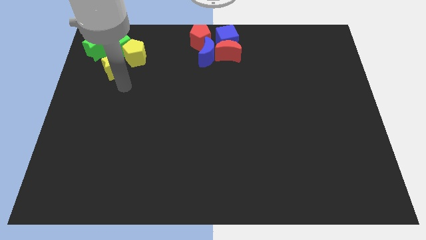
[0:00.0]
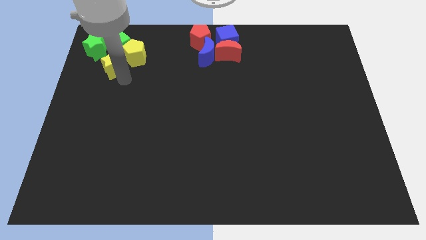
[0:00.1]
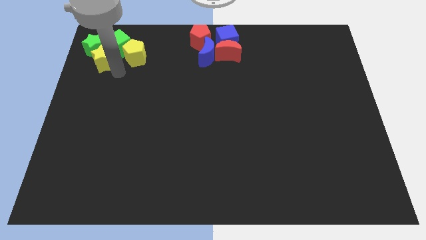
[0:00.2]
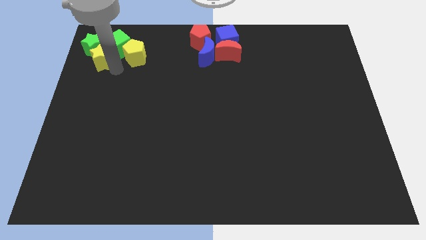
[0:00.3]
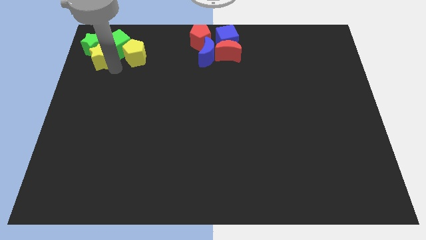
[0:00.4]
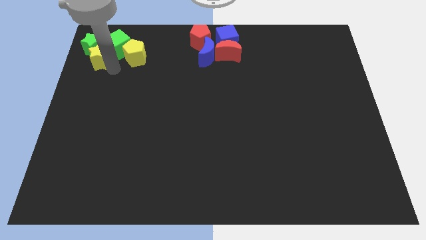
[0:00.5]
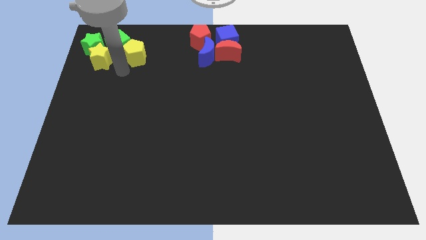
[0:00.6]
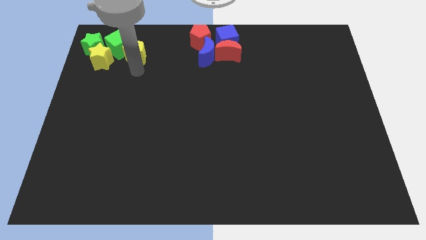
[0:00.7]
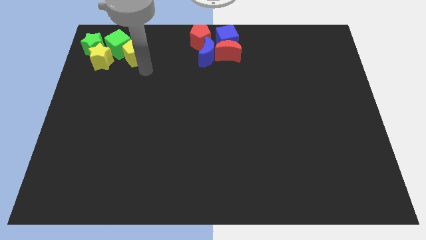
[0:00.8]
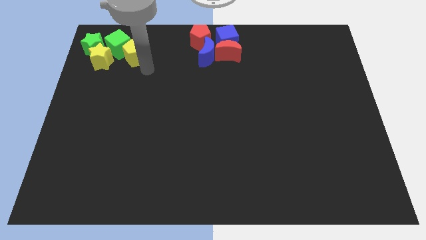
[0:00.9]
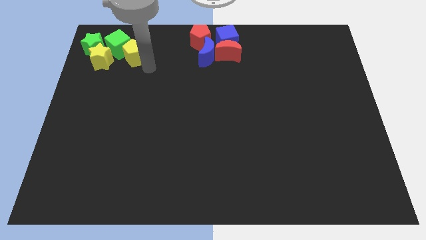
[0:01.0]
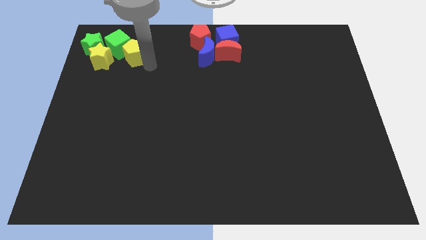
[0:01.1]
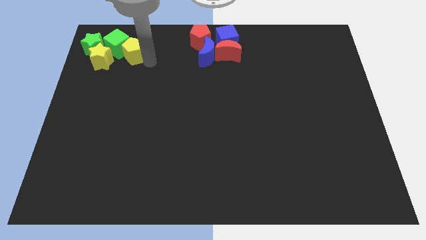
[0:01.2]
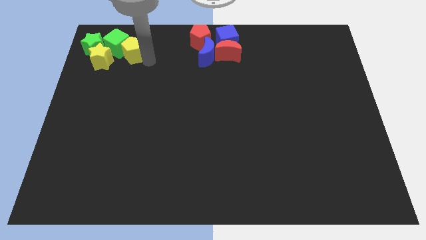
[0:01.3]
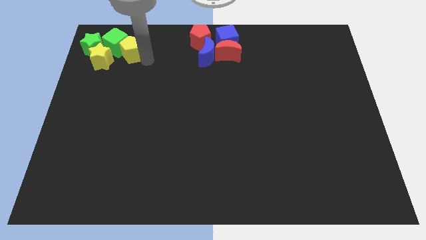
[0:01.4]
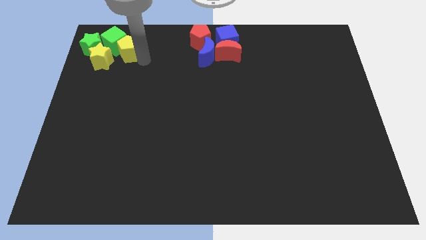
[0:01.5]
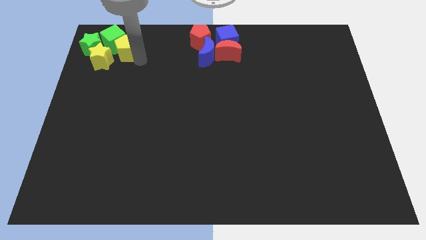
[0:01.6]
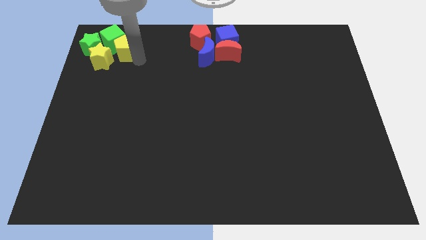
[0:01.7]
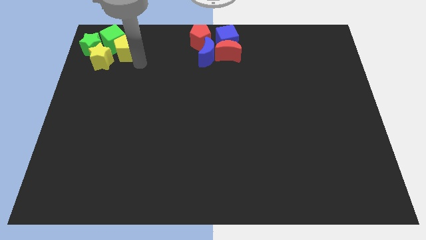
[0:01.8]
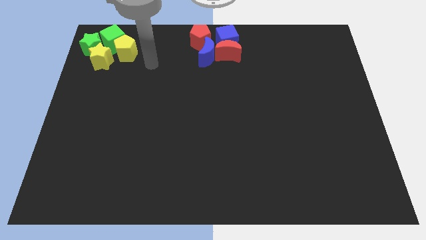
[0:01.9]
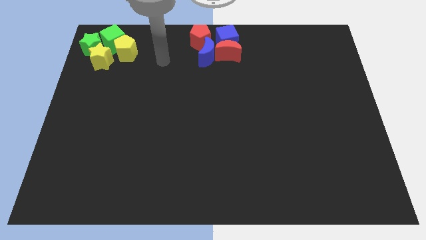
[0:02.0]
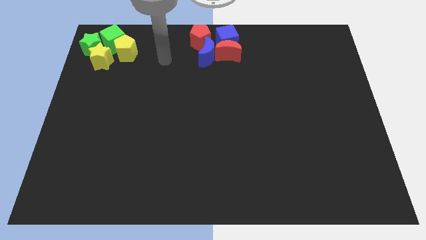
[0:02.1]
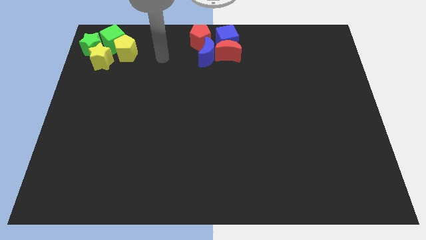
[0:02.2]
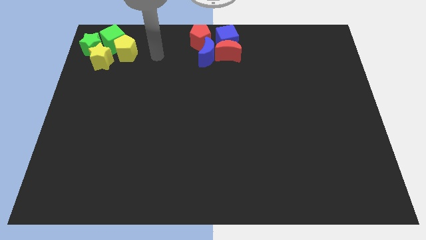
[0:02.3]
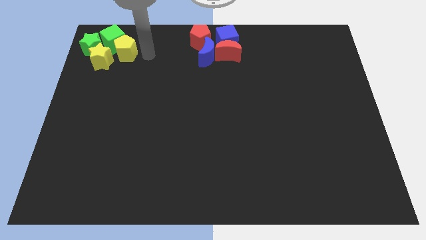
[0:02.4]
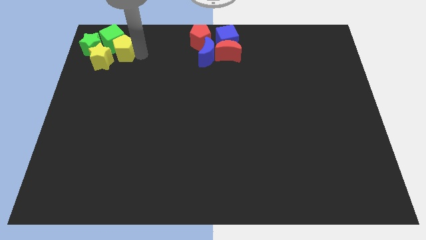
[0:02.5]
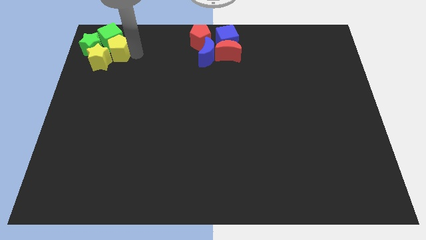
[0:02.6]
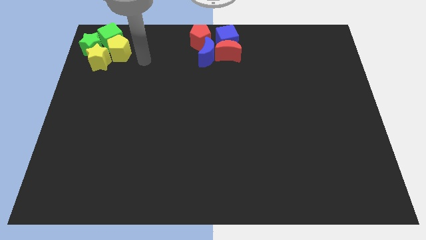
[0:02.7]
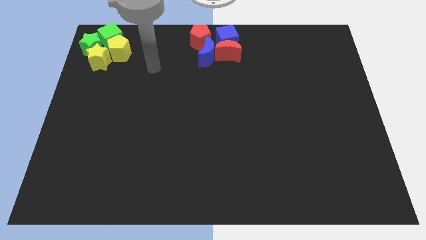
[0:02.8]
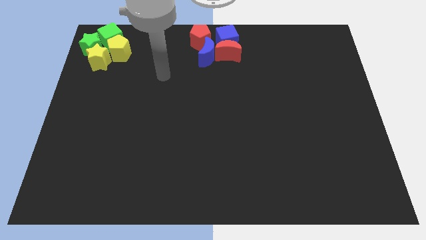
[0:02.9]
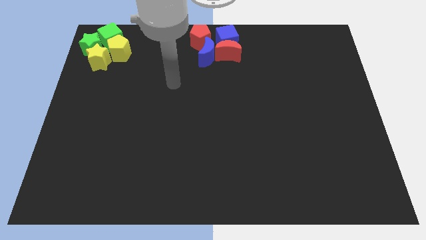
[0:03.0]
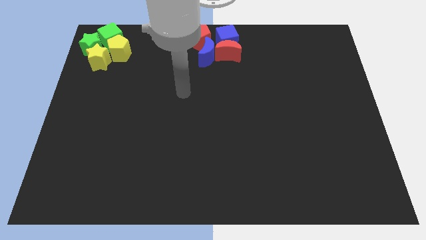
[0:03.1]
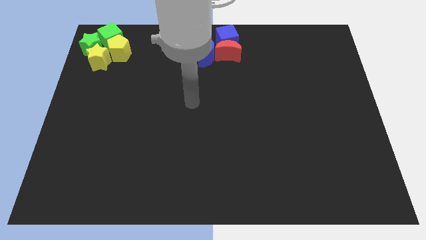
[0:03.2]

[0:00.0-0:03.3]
adjust the group of blocks at the top left

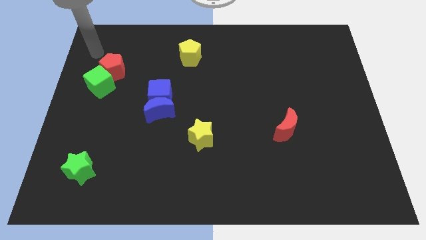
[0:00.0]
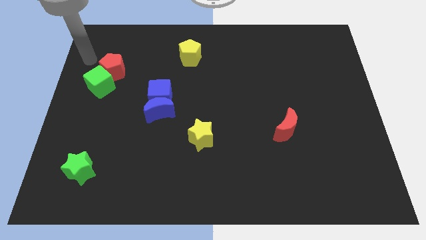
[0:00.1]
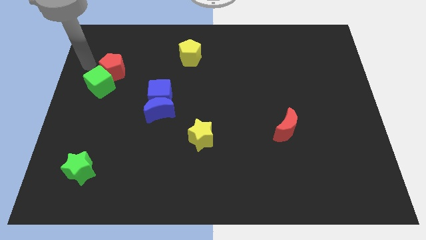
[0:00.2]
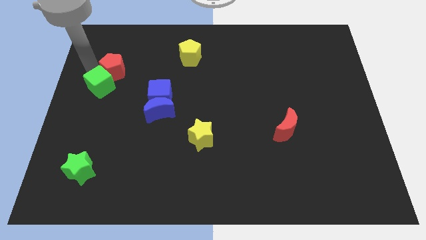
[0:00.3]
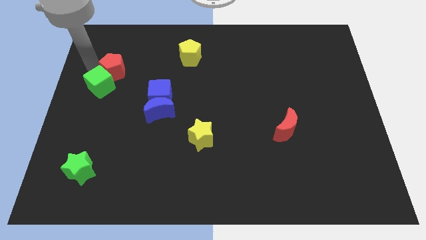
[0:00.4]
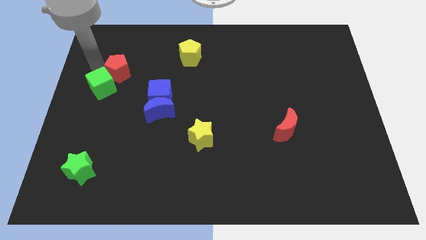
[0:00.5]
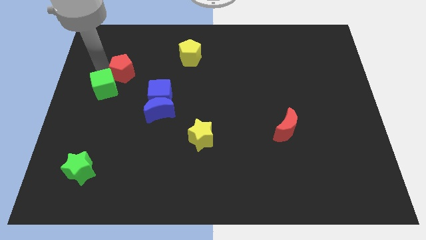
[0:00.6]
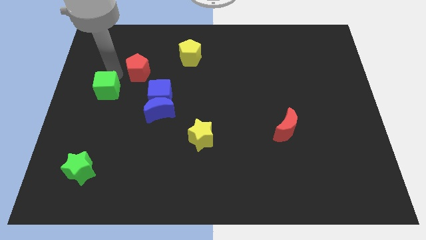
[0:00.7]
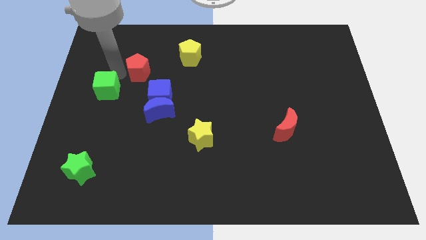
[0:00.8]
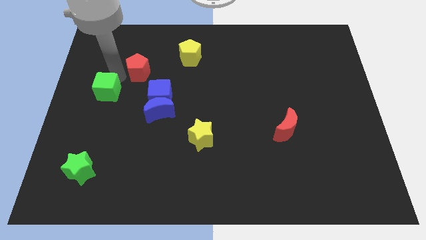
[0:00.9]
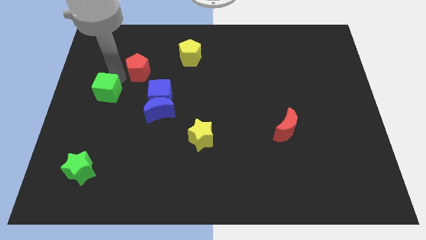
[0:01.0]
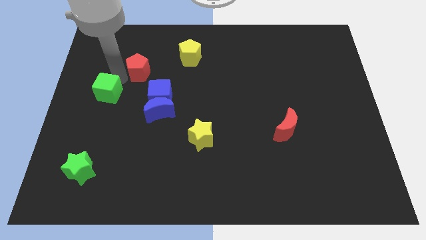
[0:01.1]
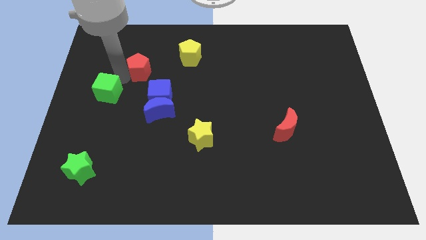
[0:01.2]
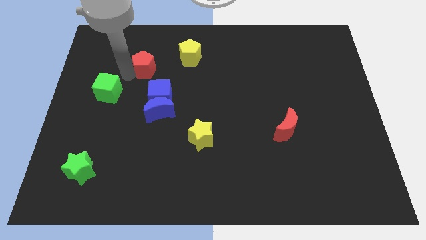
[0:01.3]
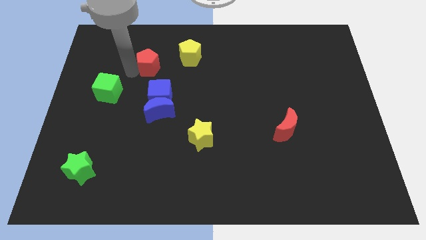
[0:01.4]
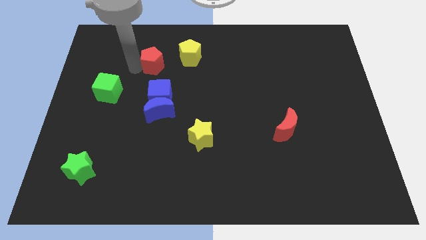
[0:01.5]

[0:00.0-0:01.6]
move the red pentagon away from the green cube

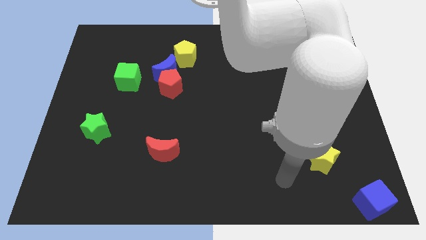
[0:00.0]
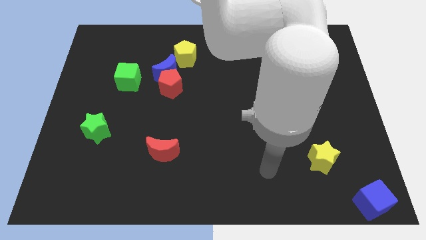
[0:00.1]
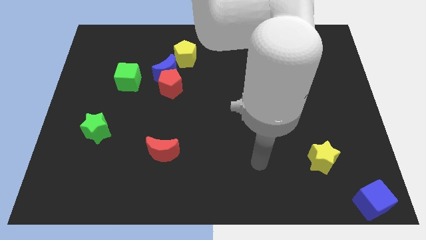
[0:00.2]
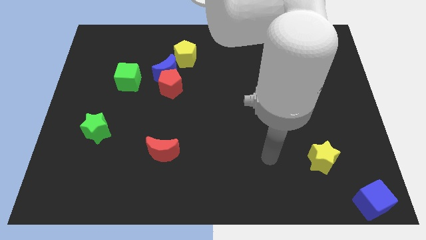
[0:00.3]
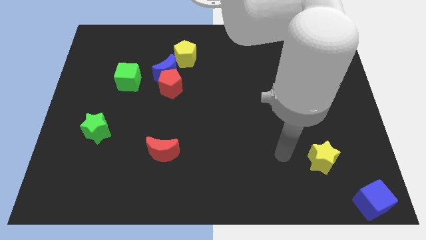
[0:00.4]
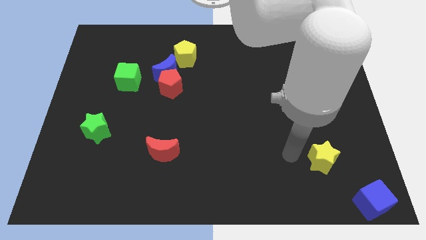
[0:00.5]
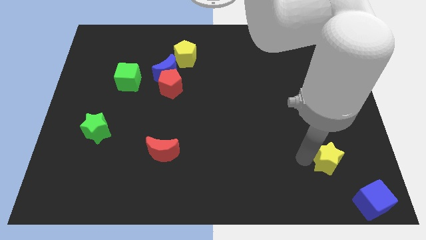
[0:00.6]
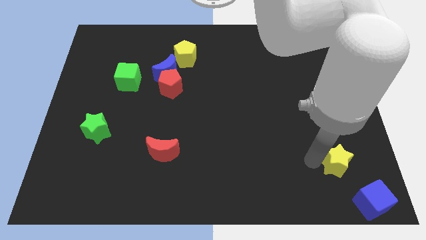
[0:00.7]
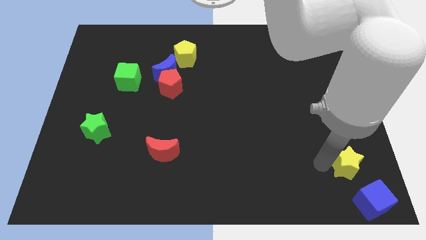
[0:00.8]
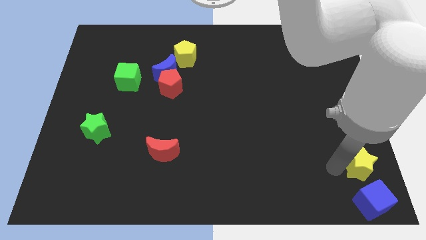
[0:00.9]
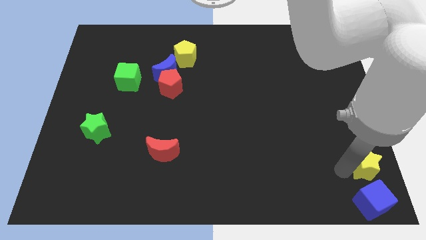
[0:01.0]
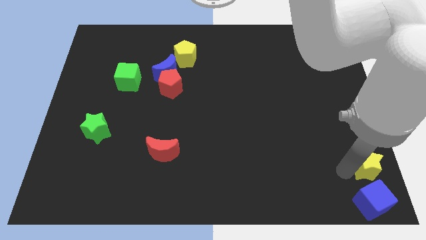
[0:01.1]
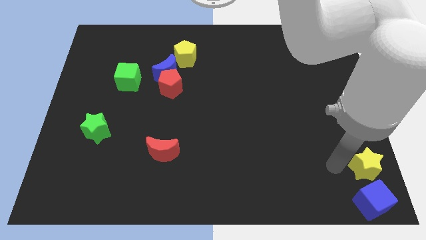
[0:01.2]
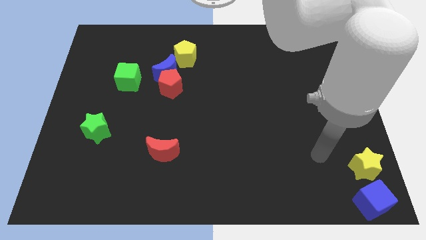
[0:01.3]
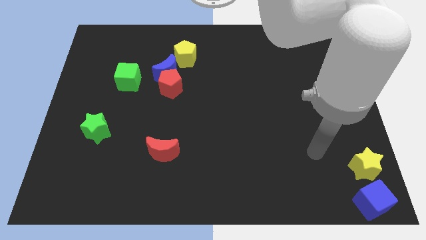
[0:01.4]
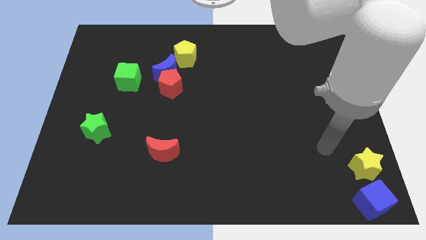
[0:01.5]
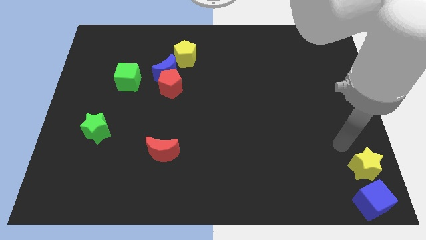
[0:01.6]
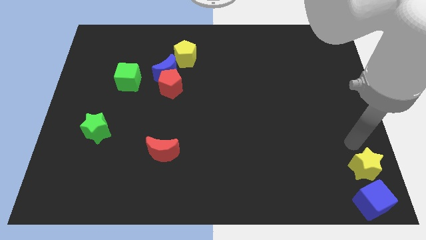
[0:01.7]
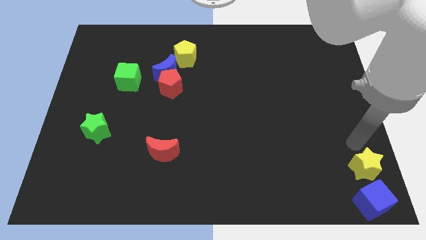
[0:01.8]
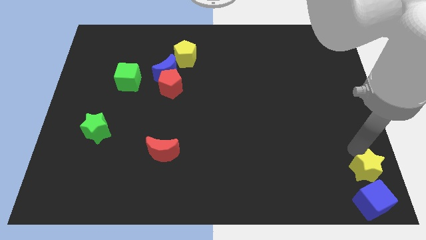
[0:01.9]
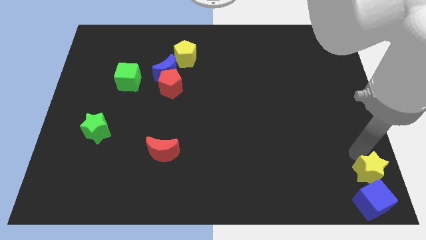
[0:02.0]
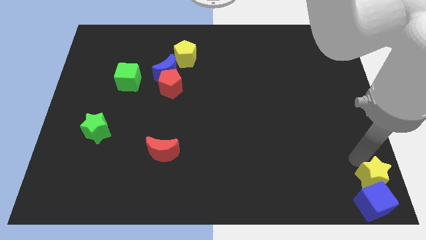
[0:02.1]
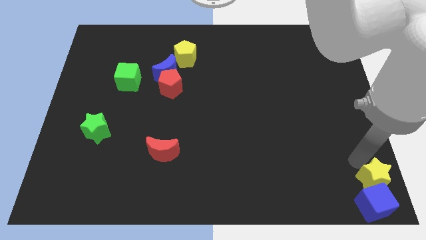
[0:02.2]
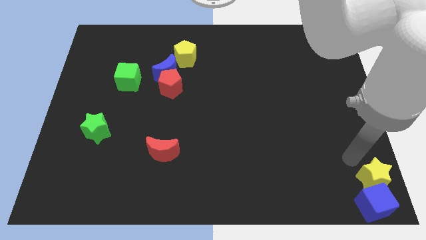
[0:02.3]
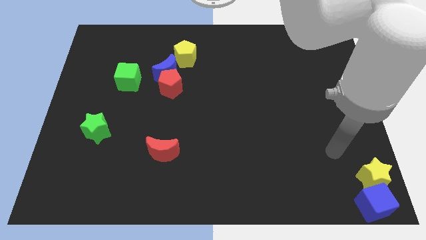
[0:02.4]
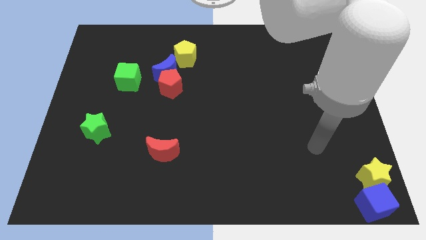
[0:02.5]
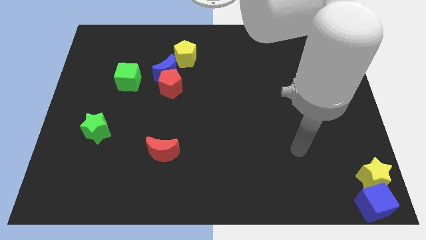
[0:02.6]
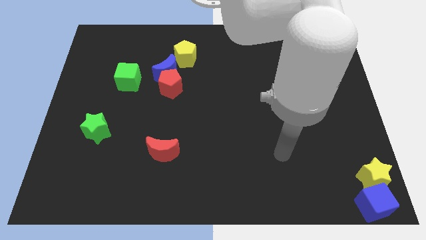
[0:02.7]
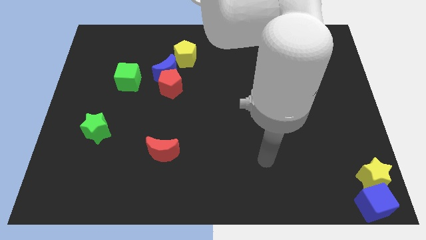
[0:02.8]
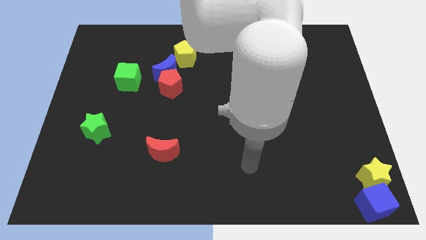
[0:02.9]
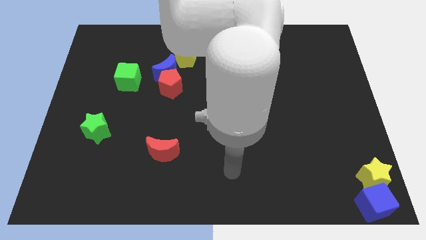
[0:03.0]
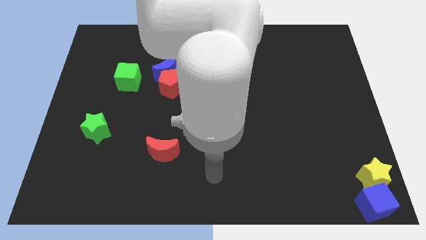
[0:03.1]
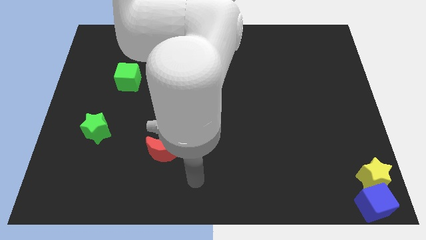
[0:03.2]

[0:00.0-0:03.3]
push the yellow star into the blue cube

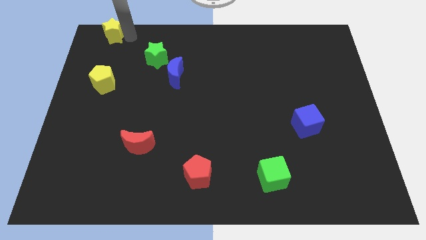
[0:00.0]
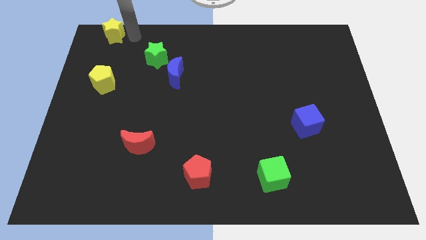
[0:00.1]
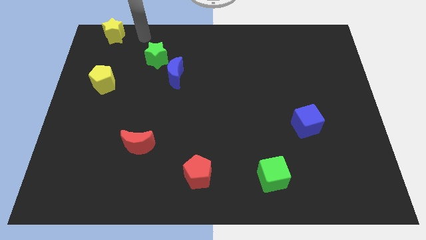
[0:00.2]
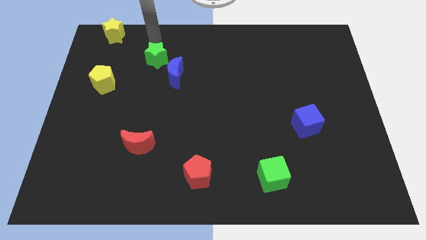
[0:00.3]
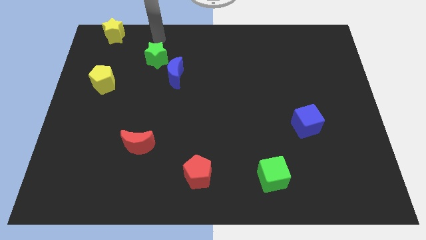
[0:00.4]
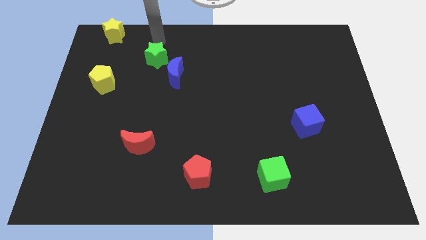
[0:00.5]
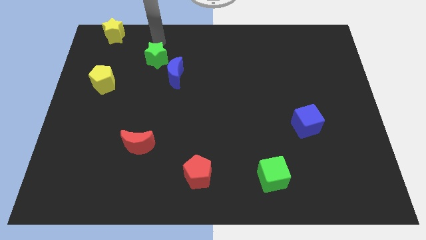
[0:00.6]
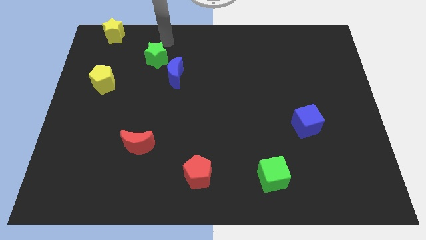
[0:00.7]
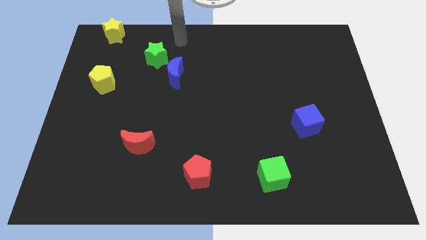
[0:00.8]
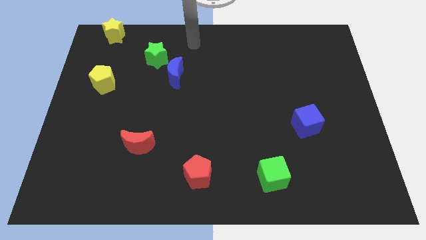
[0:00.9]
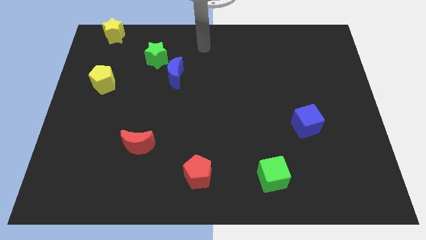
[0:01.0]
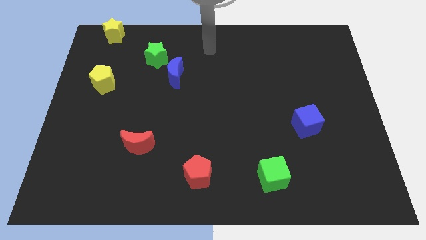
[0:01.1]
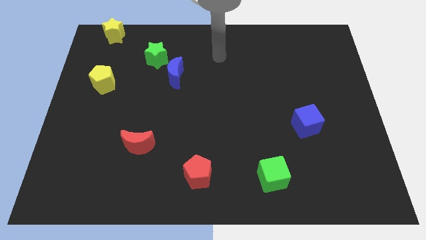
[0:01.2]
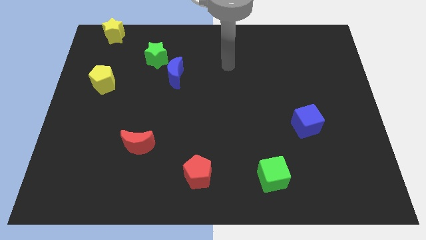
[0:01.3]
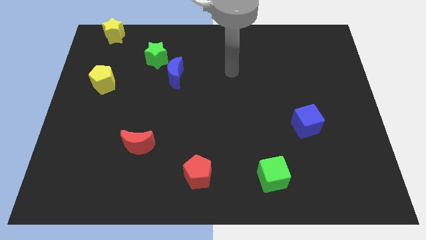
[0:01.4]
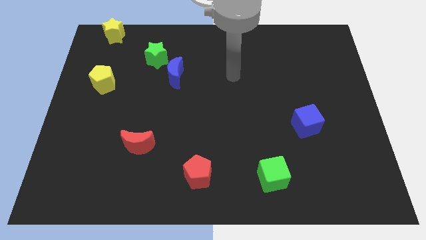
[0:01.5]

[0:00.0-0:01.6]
move your arm away from the yellow star
